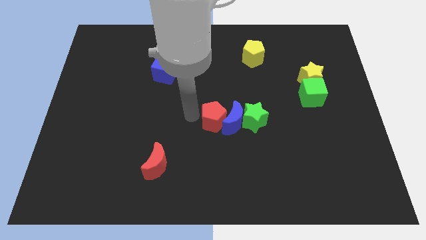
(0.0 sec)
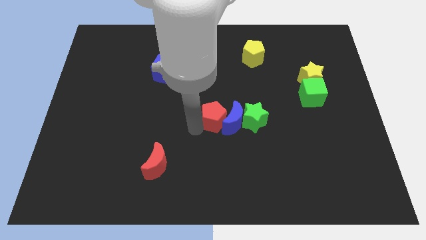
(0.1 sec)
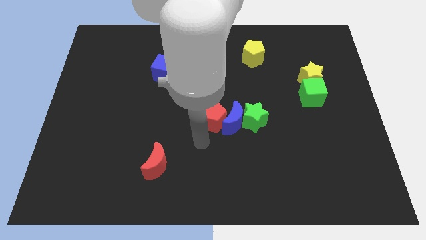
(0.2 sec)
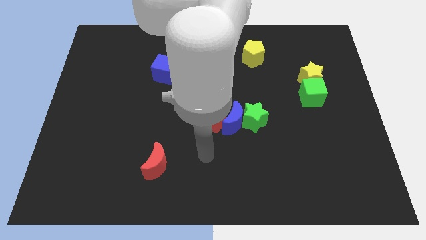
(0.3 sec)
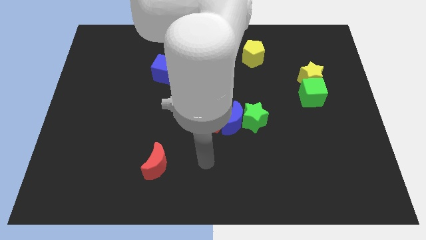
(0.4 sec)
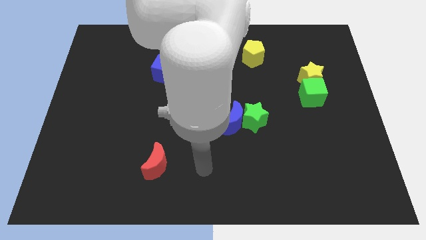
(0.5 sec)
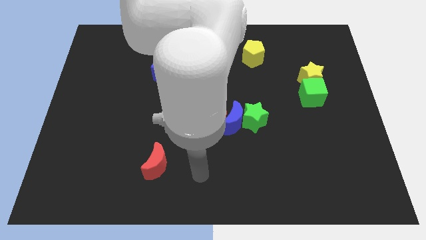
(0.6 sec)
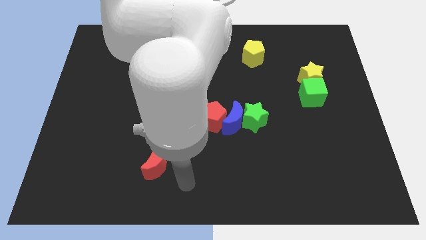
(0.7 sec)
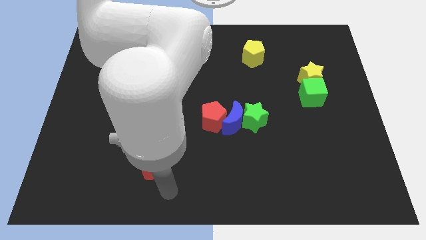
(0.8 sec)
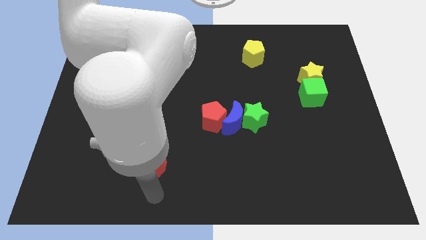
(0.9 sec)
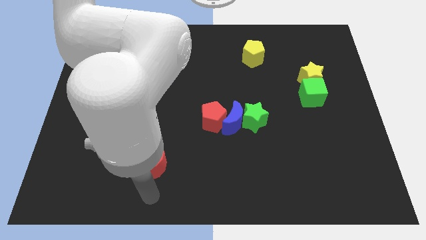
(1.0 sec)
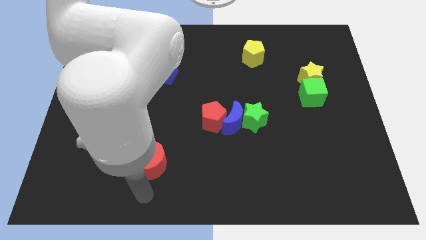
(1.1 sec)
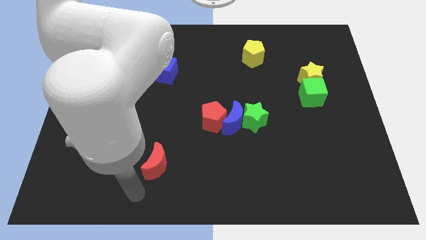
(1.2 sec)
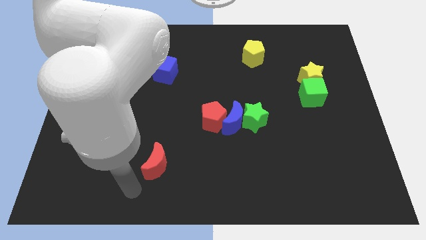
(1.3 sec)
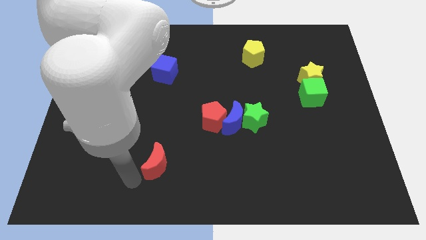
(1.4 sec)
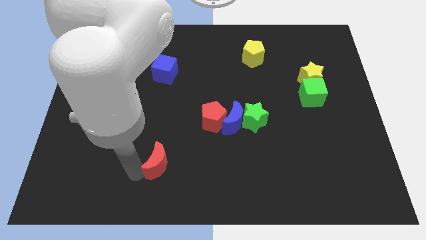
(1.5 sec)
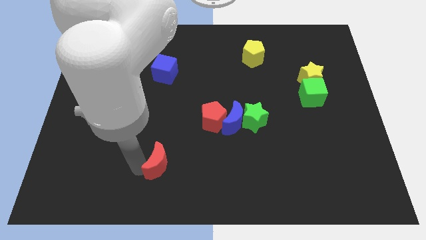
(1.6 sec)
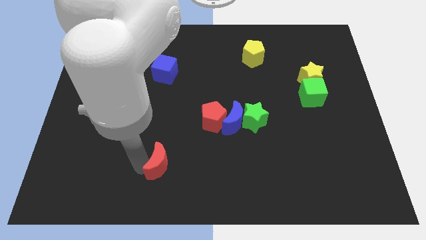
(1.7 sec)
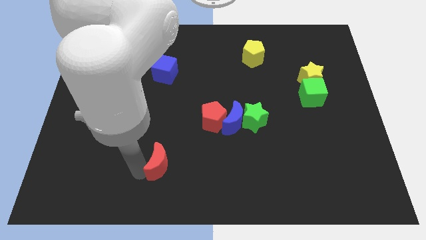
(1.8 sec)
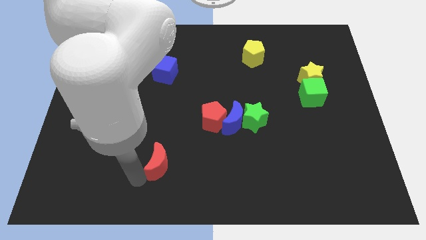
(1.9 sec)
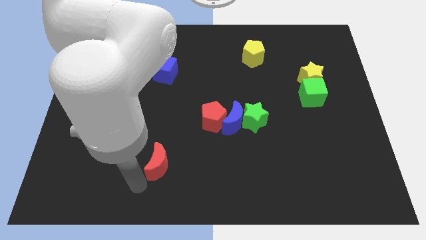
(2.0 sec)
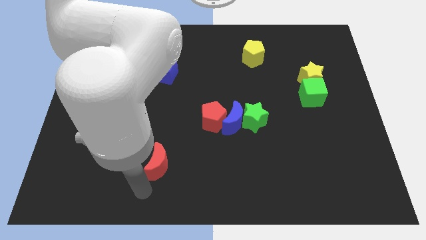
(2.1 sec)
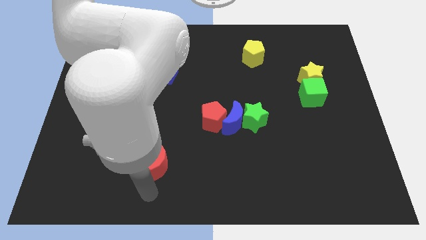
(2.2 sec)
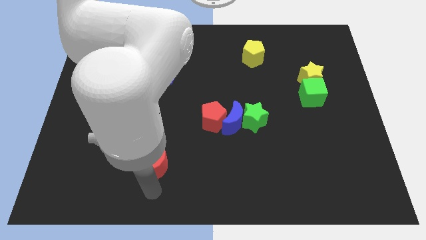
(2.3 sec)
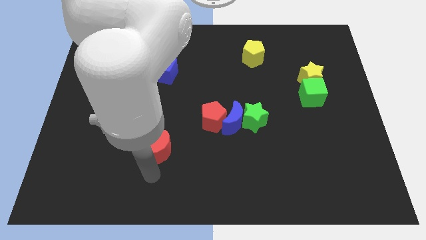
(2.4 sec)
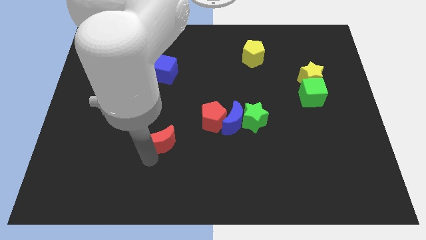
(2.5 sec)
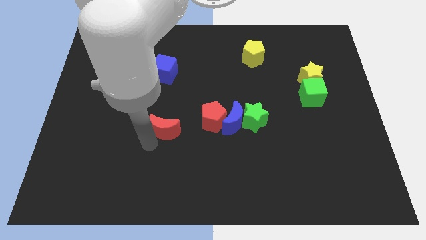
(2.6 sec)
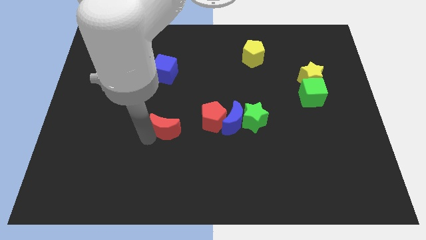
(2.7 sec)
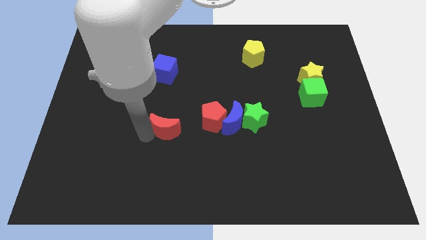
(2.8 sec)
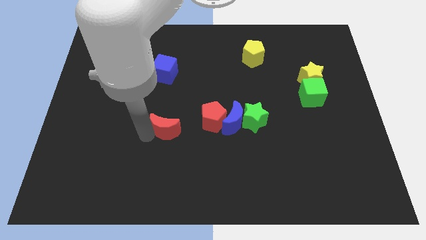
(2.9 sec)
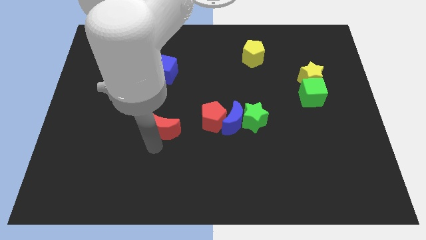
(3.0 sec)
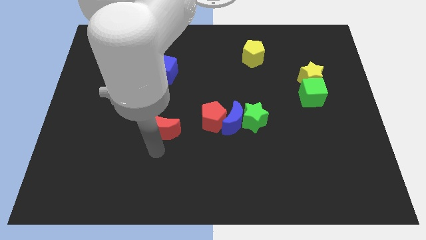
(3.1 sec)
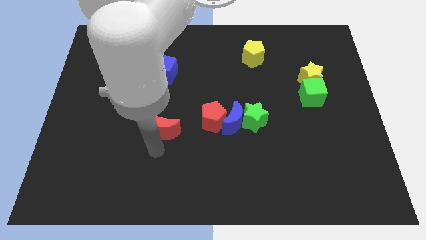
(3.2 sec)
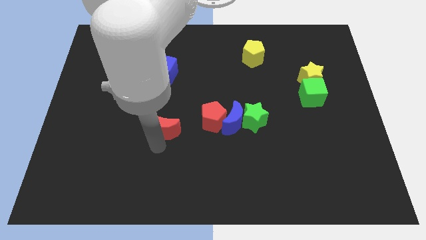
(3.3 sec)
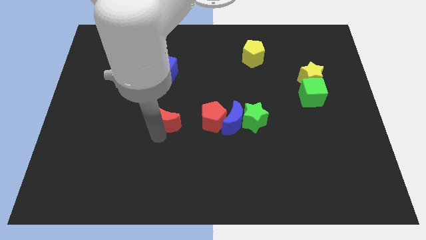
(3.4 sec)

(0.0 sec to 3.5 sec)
push the red crescent to the top slightly

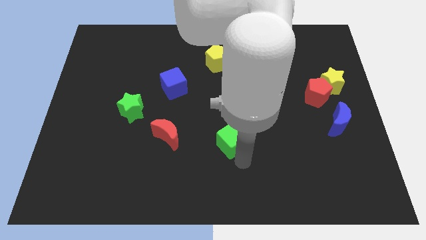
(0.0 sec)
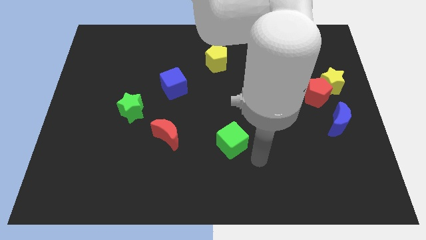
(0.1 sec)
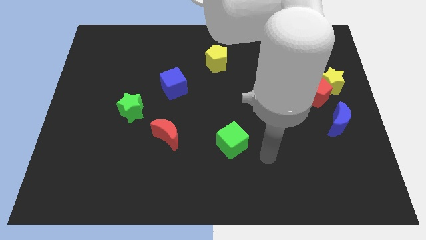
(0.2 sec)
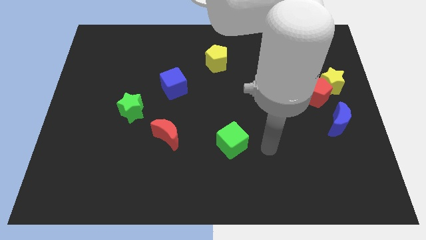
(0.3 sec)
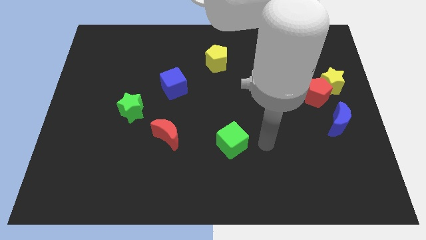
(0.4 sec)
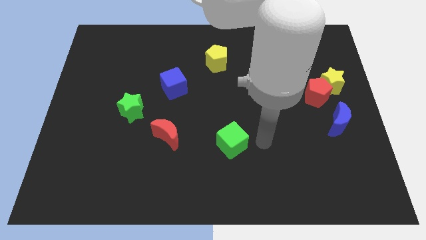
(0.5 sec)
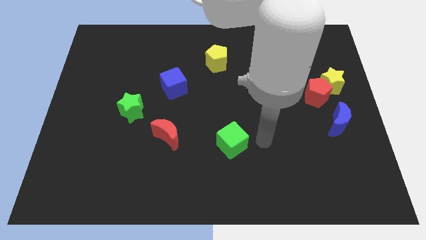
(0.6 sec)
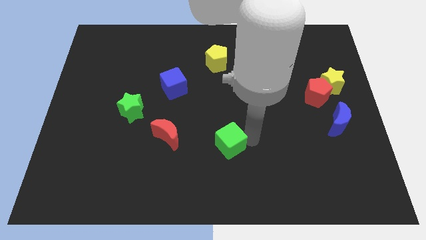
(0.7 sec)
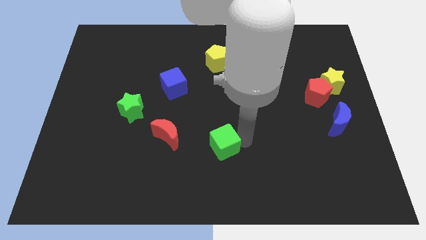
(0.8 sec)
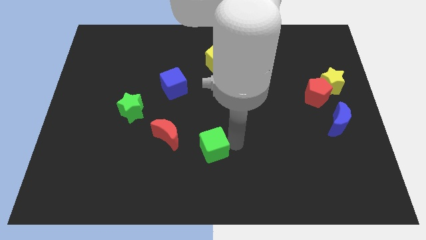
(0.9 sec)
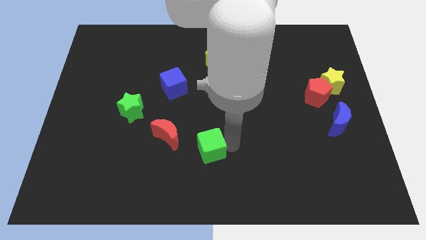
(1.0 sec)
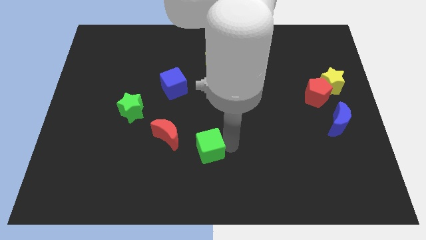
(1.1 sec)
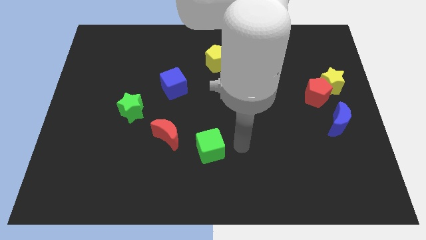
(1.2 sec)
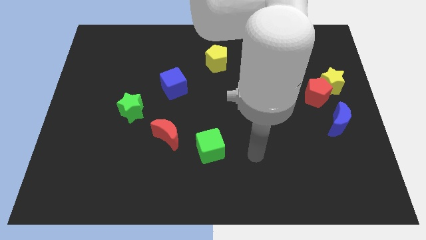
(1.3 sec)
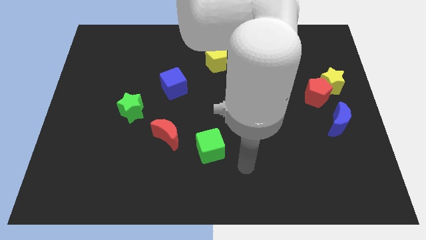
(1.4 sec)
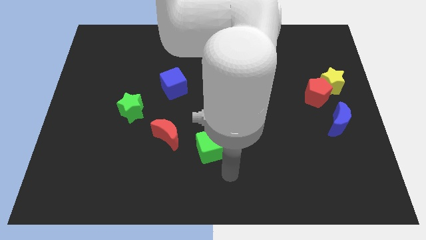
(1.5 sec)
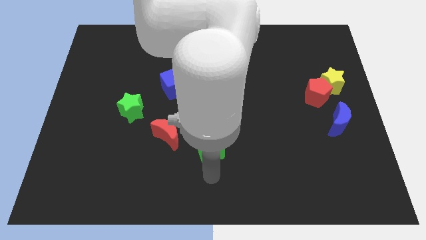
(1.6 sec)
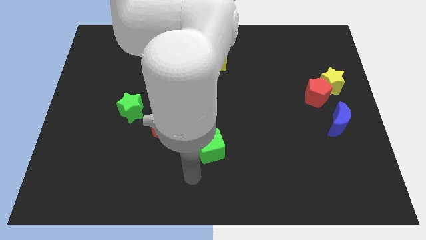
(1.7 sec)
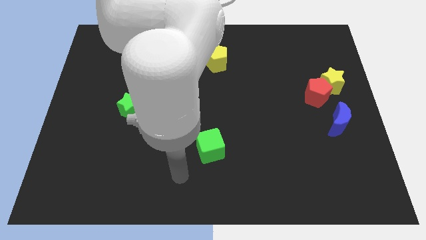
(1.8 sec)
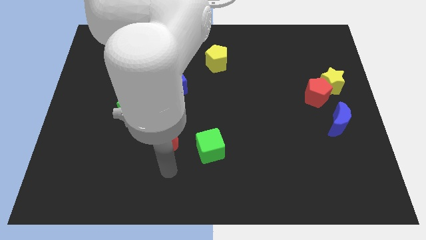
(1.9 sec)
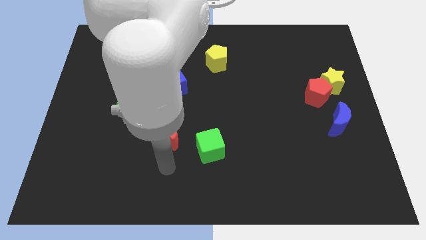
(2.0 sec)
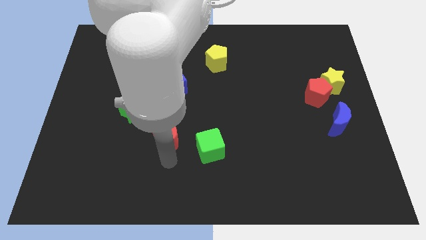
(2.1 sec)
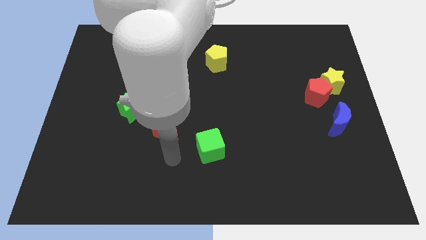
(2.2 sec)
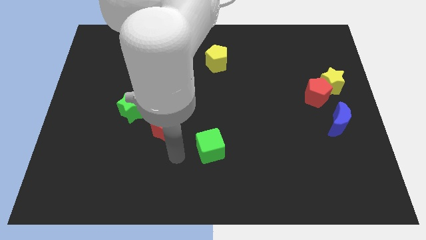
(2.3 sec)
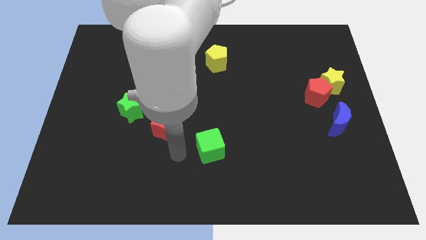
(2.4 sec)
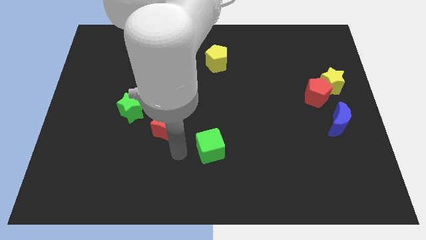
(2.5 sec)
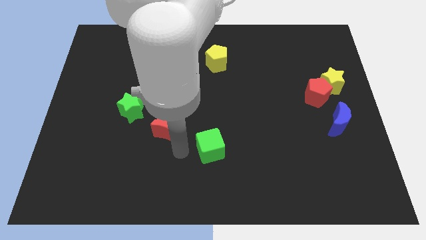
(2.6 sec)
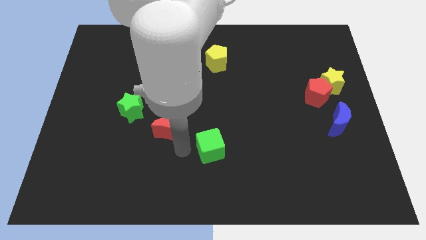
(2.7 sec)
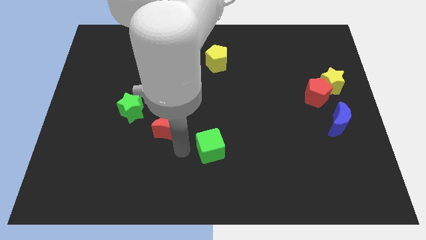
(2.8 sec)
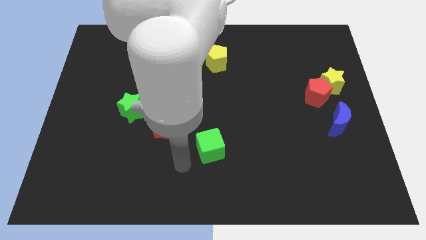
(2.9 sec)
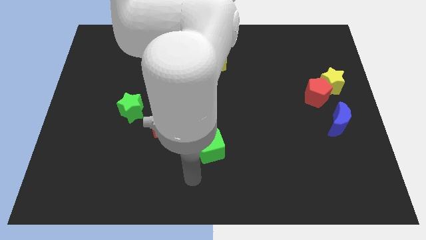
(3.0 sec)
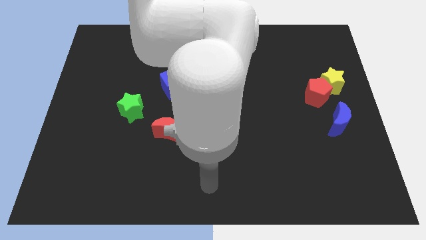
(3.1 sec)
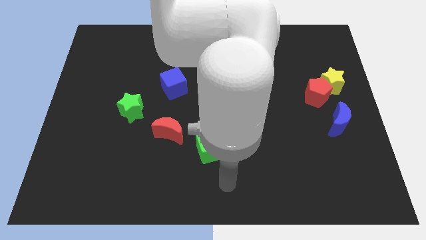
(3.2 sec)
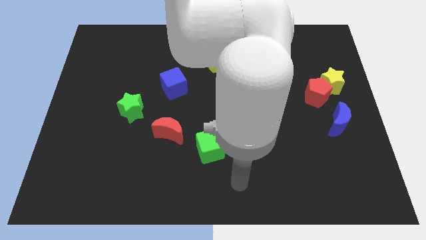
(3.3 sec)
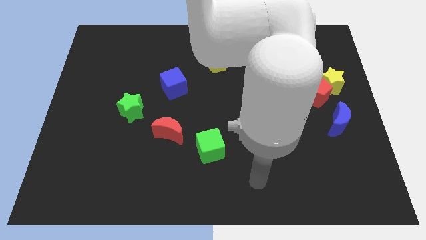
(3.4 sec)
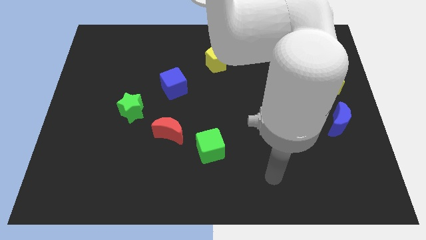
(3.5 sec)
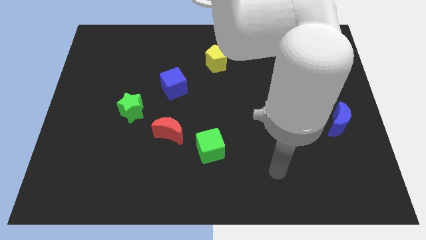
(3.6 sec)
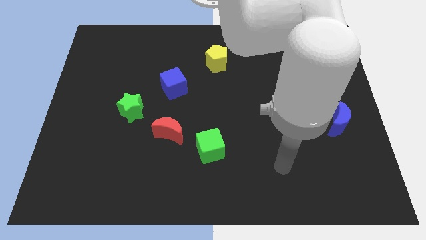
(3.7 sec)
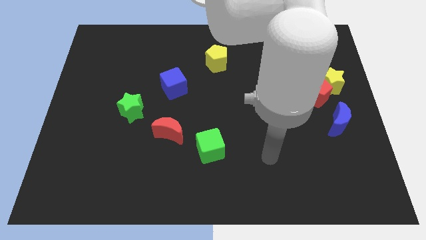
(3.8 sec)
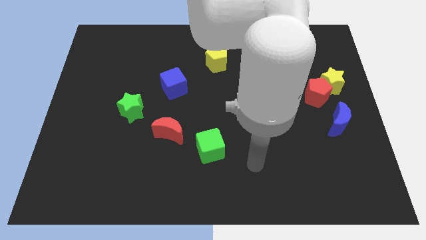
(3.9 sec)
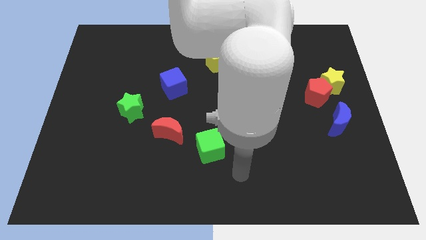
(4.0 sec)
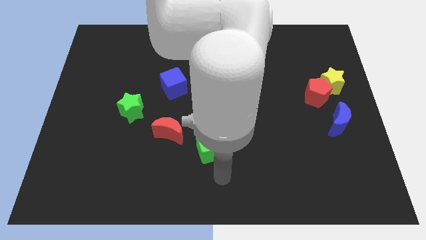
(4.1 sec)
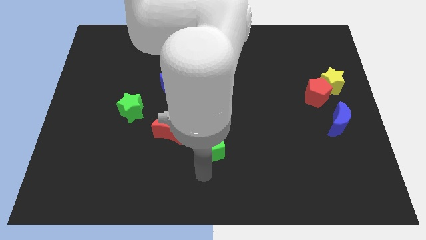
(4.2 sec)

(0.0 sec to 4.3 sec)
push the green cube towards the red moon

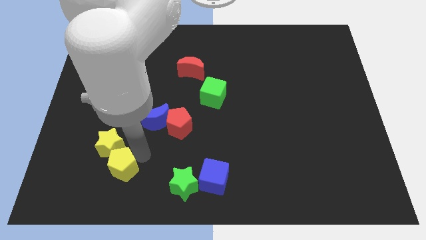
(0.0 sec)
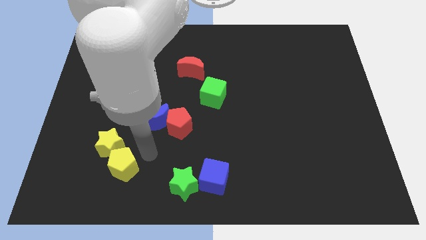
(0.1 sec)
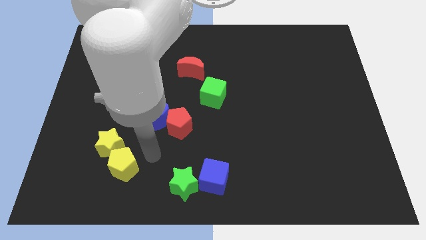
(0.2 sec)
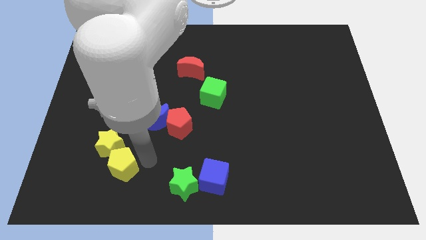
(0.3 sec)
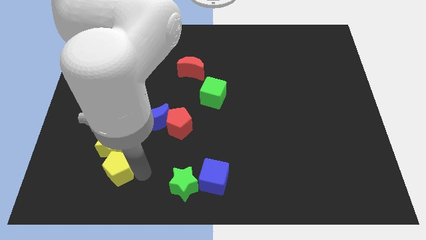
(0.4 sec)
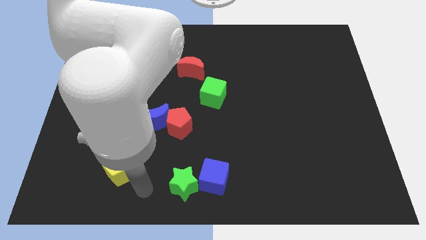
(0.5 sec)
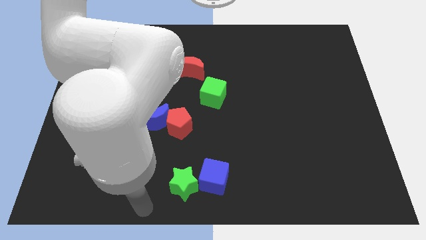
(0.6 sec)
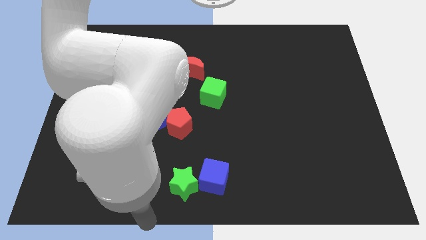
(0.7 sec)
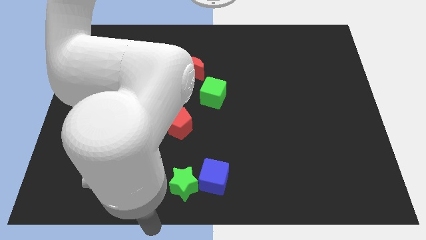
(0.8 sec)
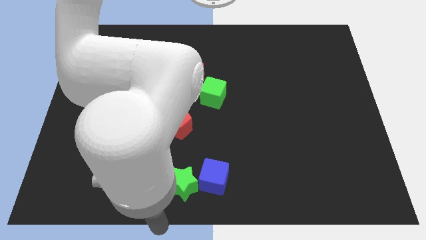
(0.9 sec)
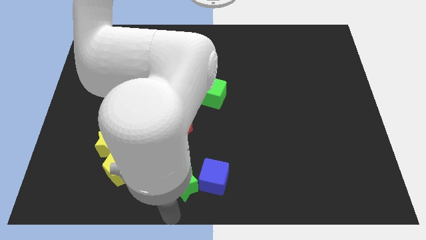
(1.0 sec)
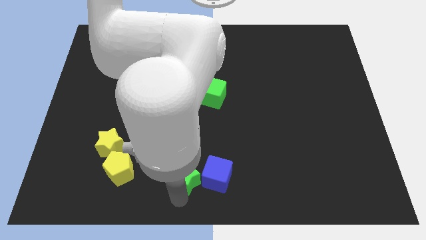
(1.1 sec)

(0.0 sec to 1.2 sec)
place the arm at the bottom of the green star
